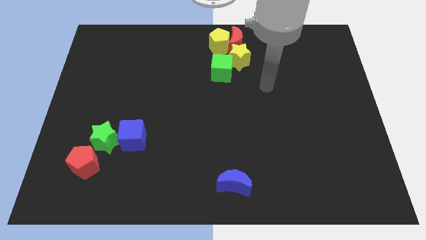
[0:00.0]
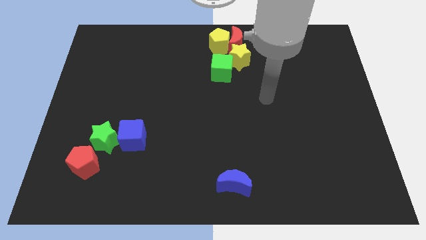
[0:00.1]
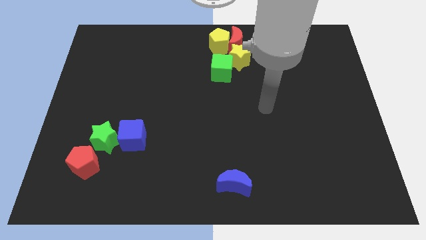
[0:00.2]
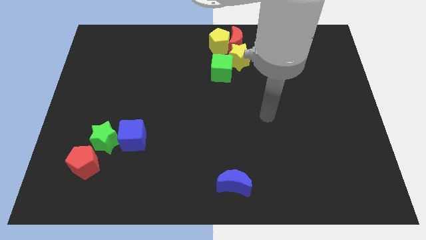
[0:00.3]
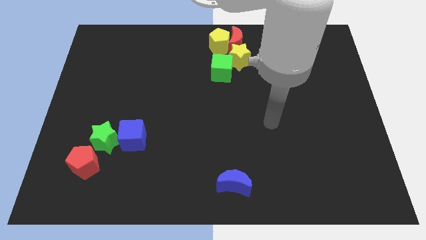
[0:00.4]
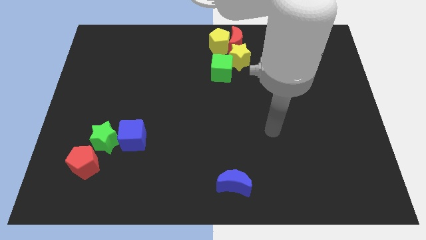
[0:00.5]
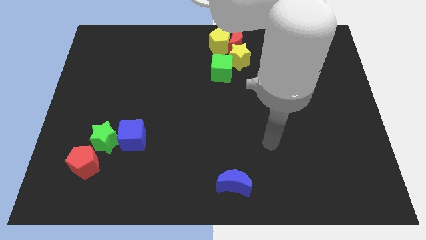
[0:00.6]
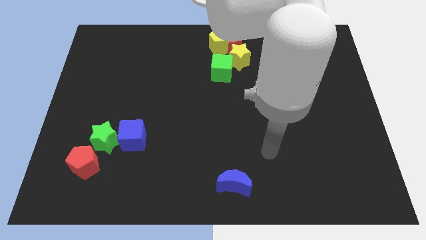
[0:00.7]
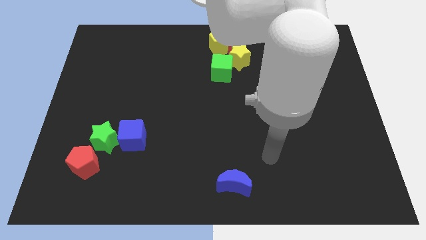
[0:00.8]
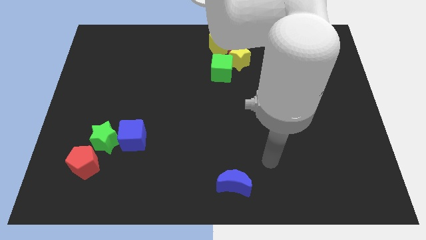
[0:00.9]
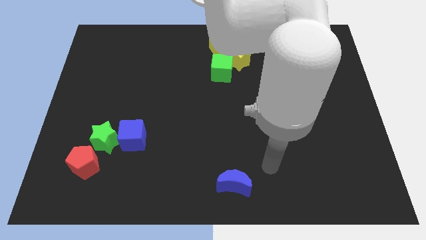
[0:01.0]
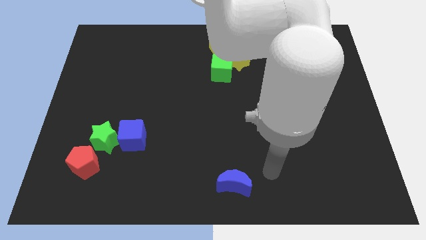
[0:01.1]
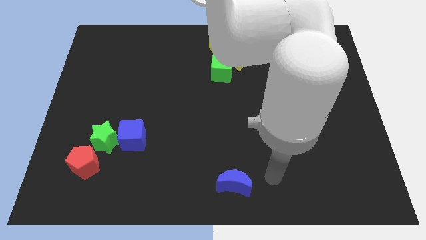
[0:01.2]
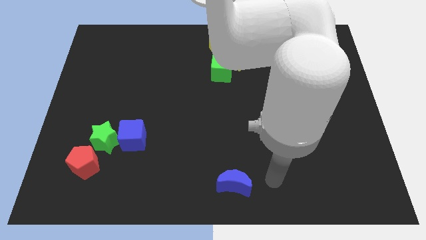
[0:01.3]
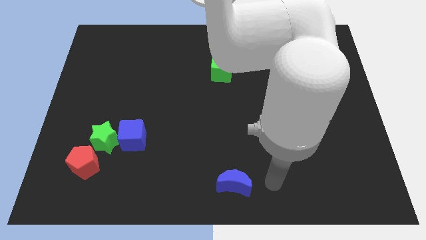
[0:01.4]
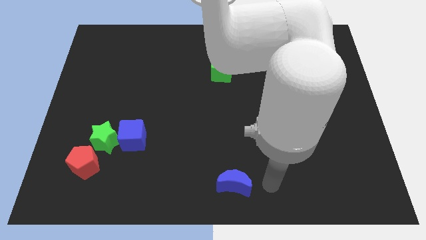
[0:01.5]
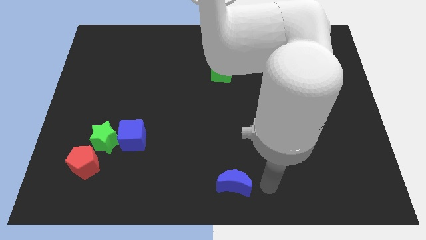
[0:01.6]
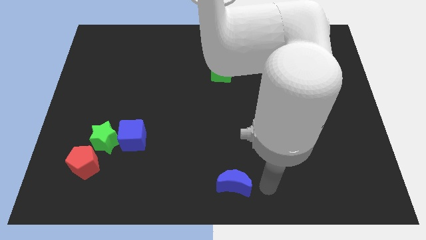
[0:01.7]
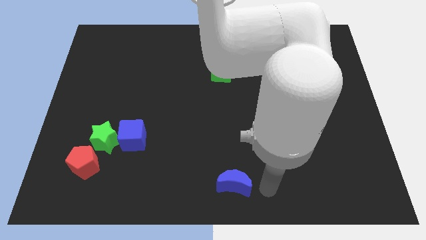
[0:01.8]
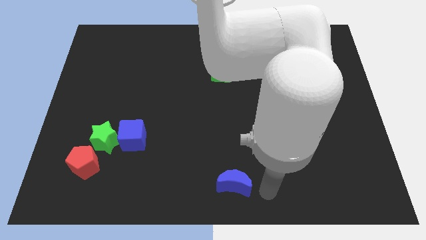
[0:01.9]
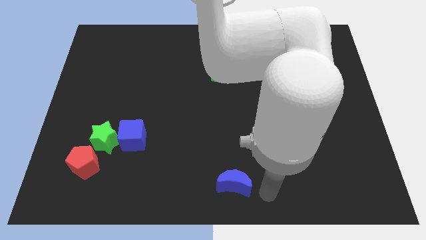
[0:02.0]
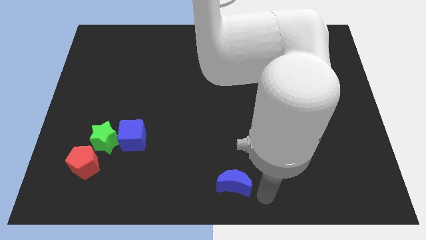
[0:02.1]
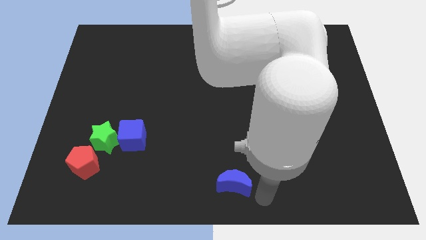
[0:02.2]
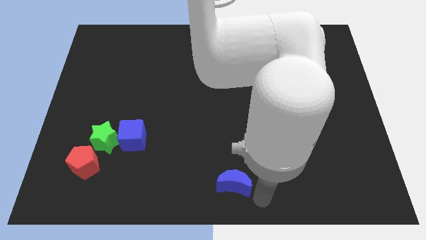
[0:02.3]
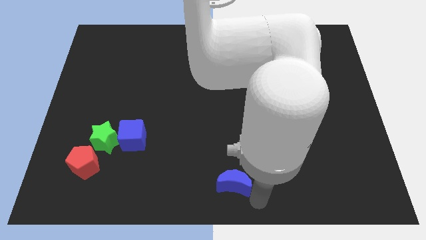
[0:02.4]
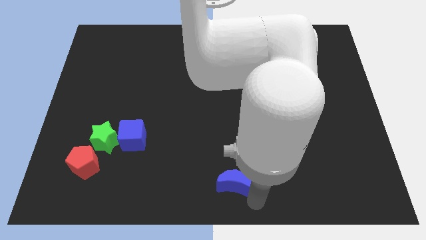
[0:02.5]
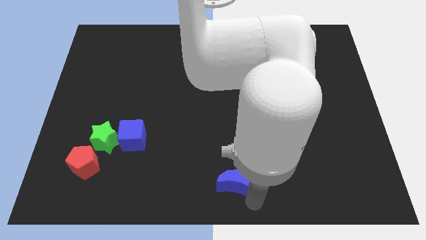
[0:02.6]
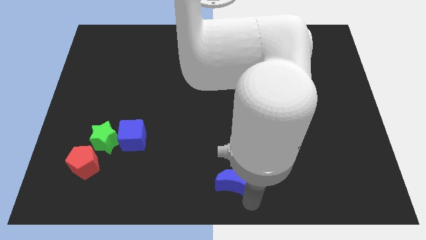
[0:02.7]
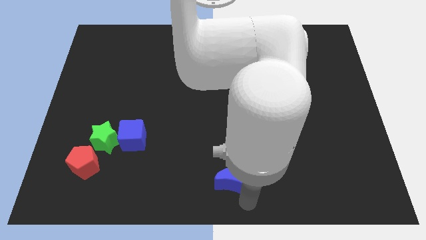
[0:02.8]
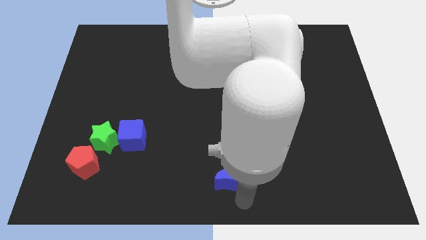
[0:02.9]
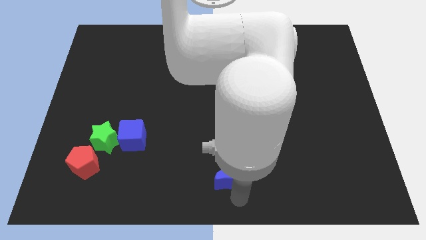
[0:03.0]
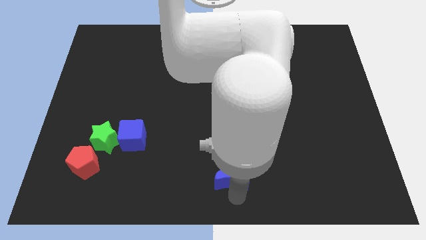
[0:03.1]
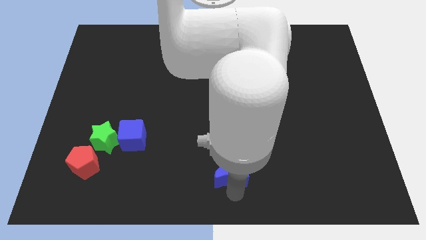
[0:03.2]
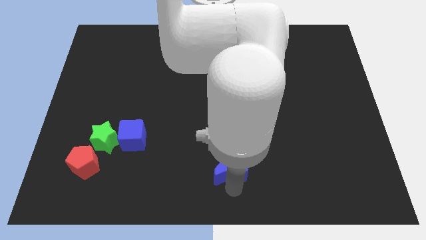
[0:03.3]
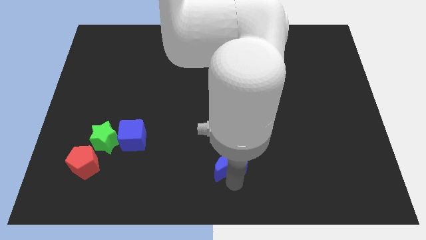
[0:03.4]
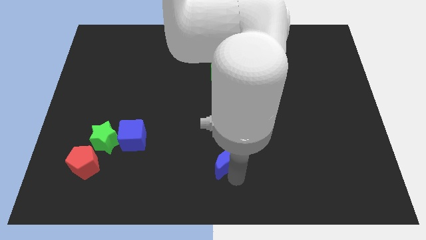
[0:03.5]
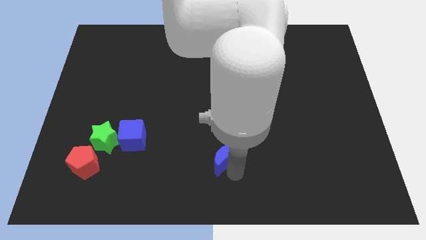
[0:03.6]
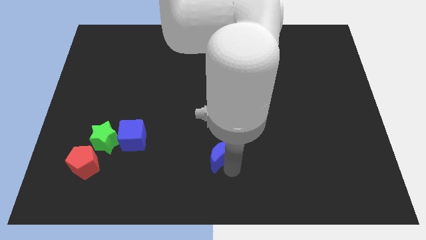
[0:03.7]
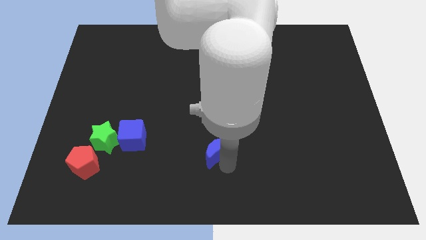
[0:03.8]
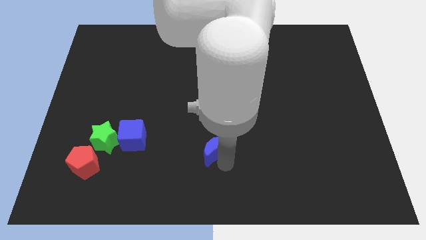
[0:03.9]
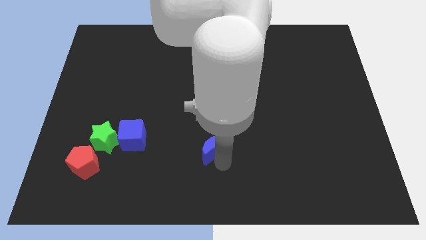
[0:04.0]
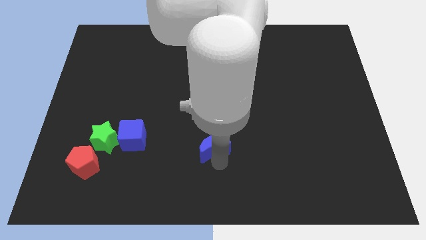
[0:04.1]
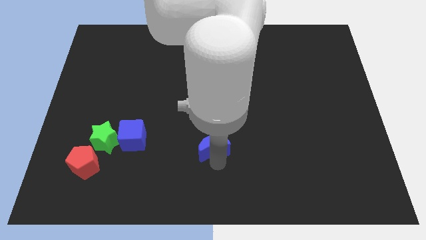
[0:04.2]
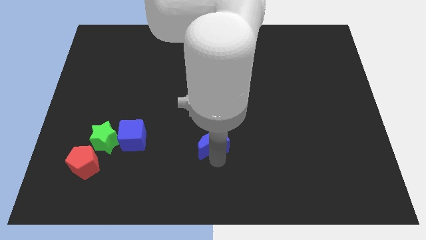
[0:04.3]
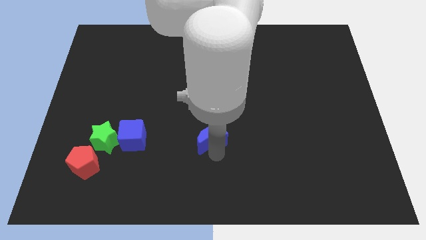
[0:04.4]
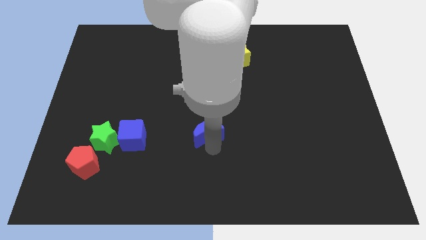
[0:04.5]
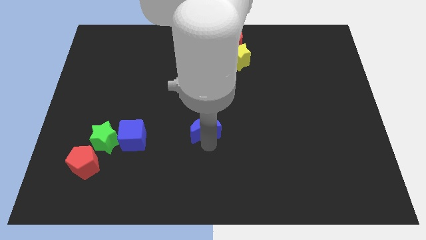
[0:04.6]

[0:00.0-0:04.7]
drag the blue moon parallel to the blue cube

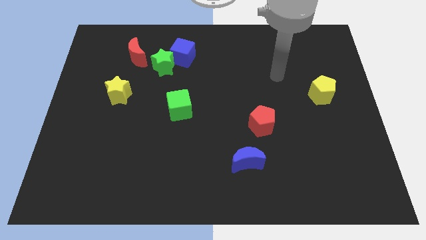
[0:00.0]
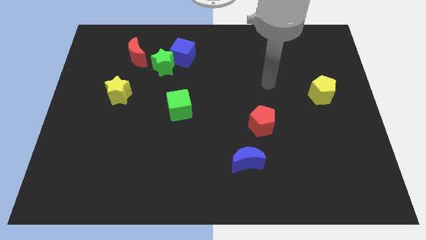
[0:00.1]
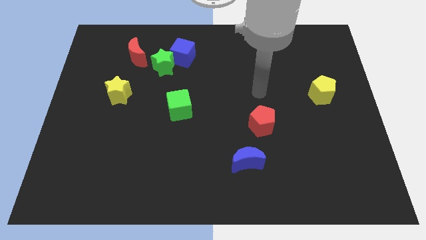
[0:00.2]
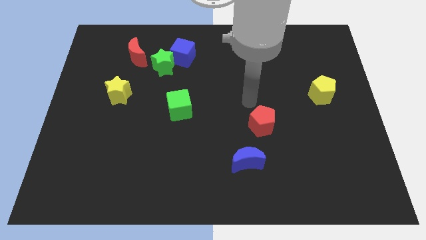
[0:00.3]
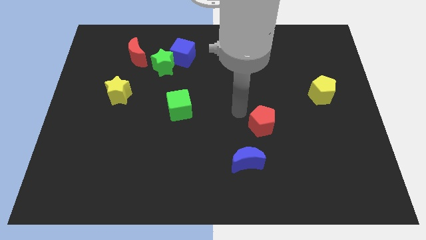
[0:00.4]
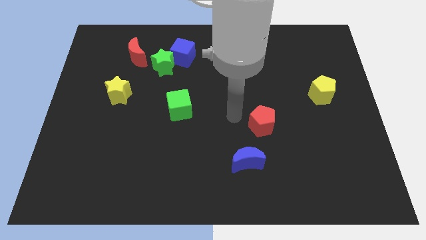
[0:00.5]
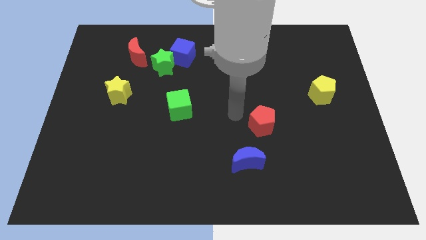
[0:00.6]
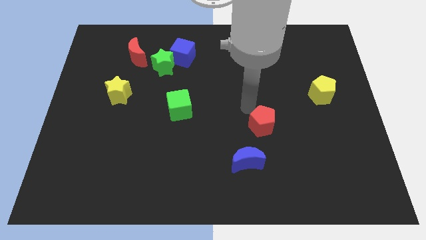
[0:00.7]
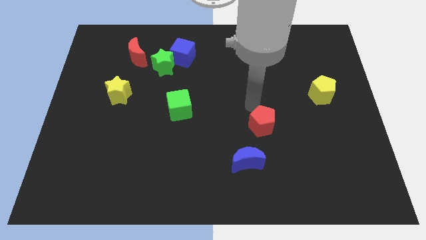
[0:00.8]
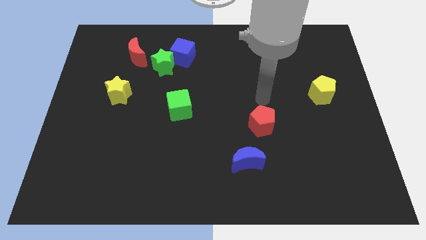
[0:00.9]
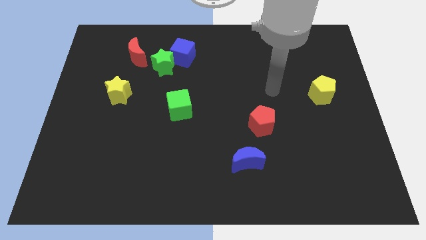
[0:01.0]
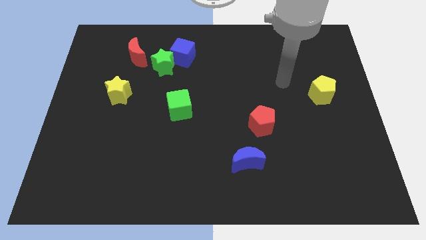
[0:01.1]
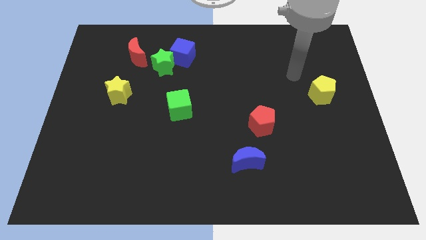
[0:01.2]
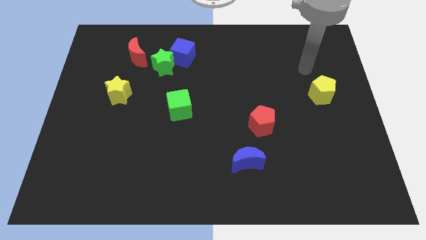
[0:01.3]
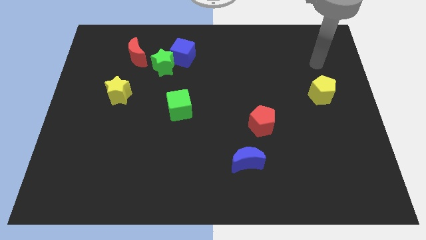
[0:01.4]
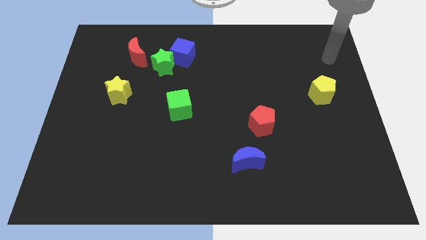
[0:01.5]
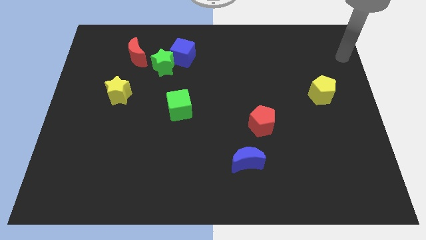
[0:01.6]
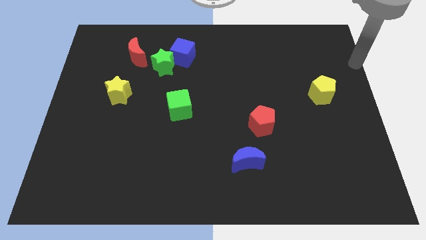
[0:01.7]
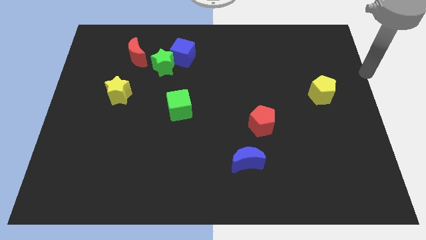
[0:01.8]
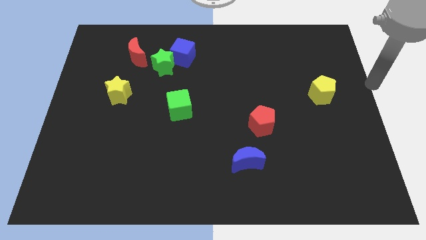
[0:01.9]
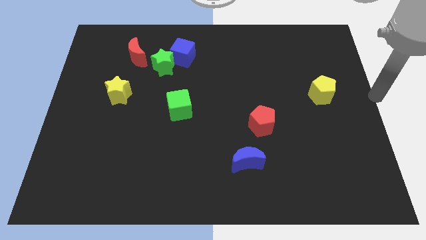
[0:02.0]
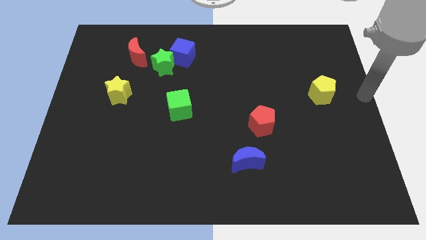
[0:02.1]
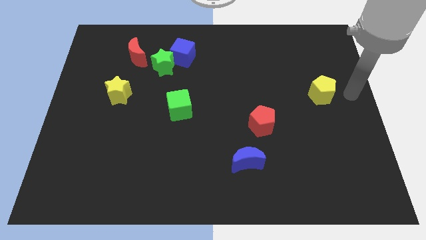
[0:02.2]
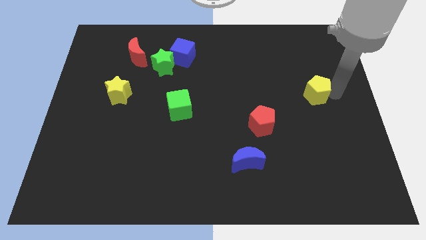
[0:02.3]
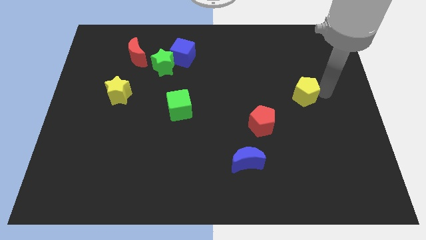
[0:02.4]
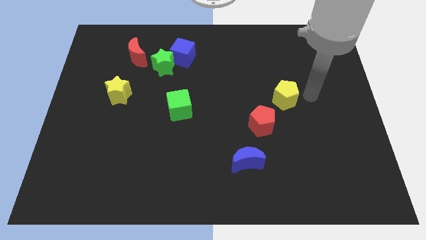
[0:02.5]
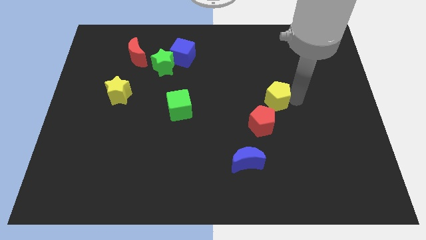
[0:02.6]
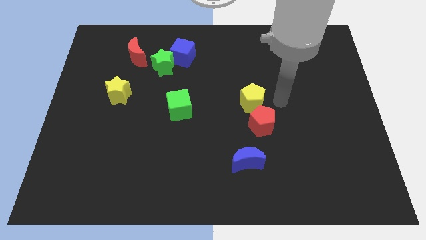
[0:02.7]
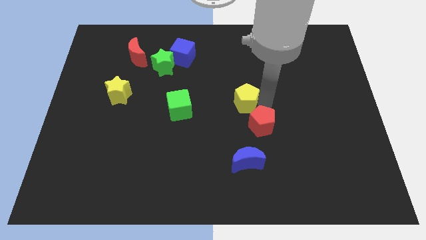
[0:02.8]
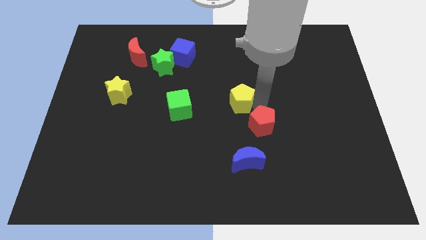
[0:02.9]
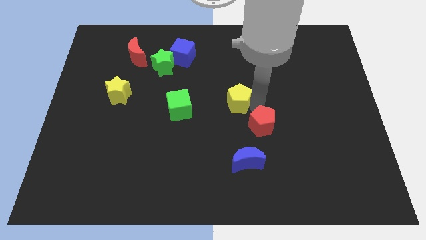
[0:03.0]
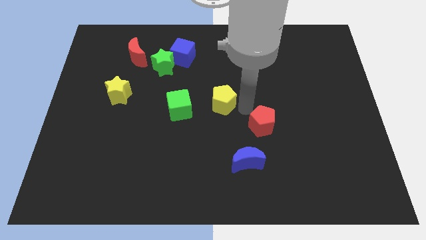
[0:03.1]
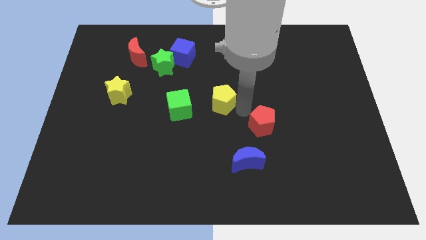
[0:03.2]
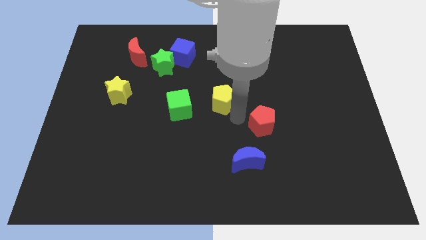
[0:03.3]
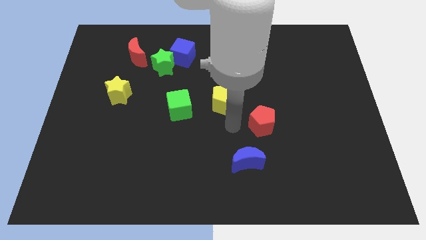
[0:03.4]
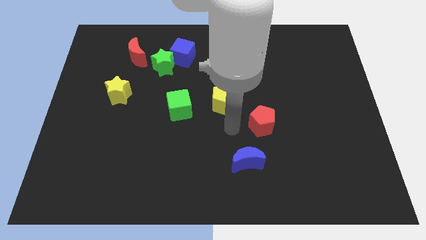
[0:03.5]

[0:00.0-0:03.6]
slide the yellow pentagon diagonally top left to the red pentagon

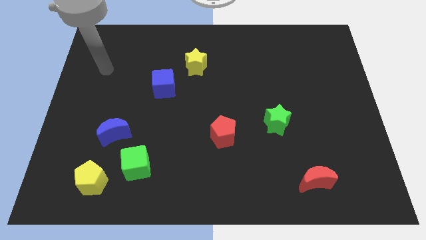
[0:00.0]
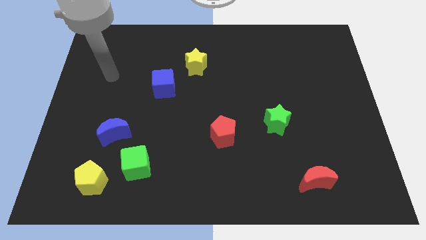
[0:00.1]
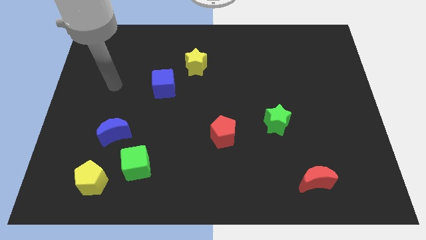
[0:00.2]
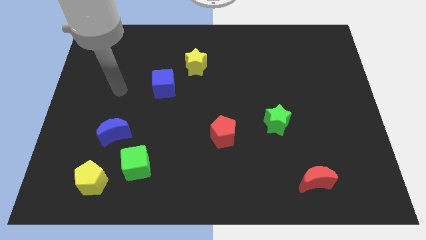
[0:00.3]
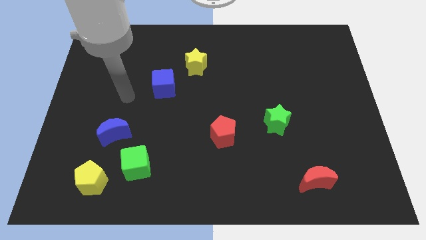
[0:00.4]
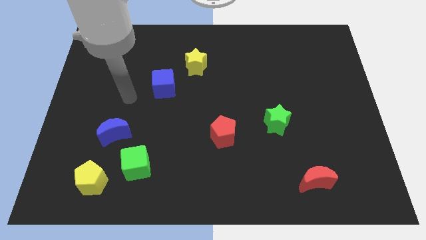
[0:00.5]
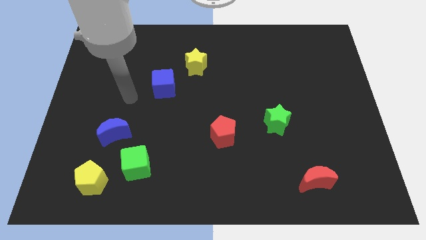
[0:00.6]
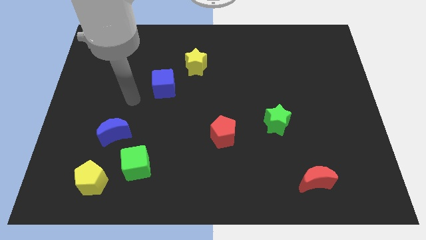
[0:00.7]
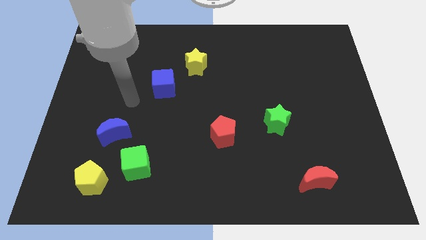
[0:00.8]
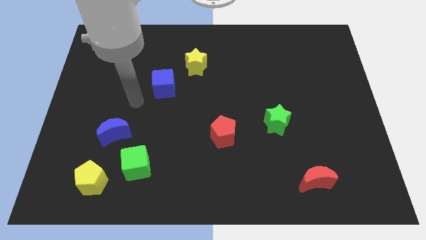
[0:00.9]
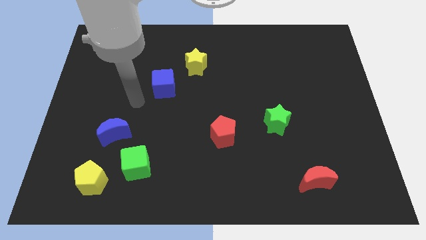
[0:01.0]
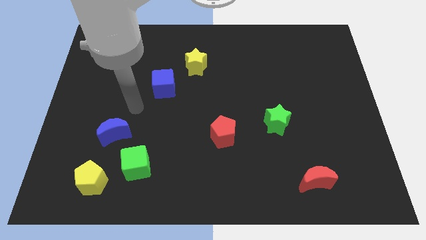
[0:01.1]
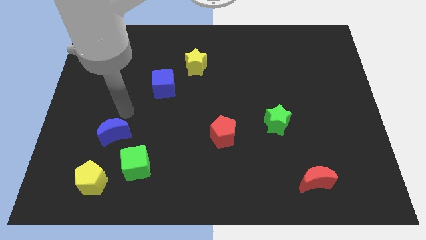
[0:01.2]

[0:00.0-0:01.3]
point your arm in between the blue blocks
